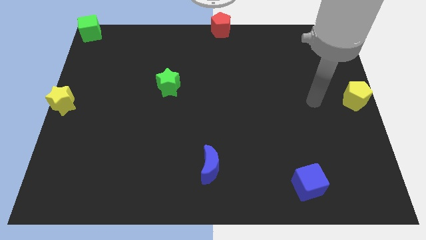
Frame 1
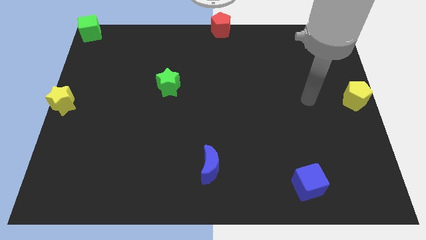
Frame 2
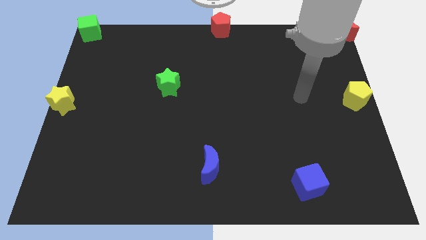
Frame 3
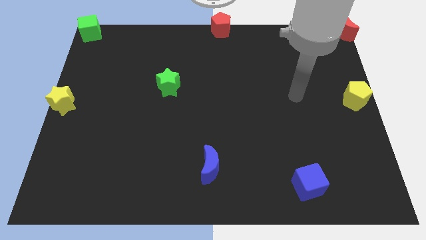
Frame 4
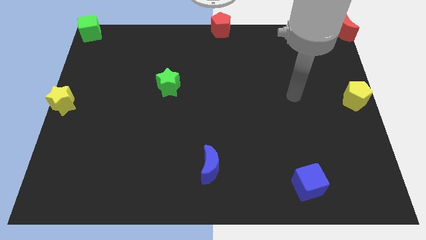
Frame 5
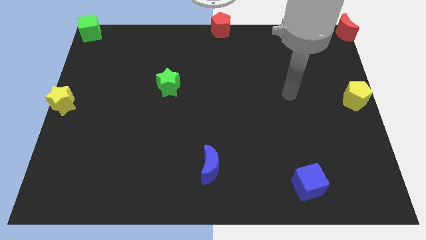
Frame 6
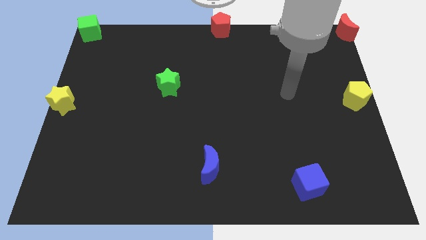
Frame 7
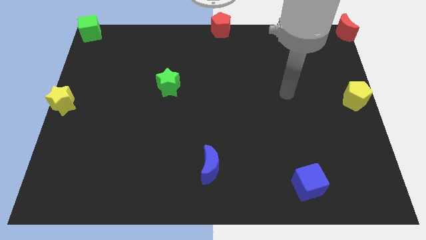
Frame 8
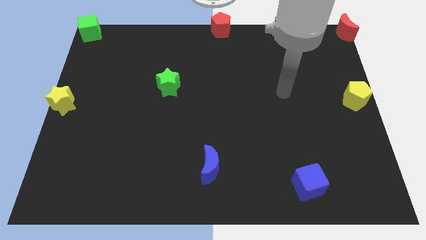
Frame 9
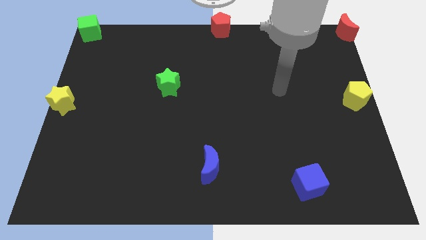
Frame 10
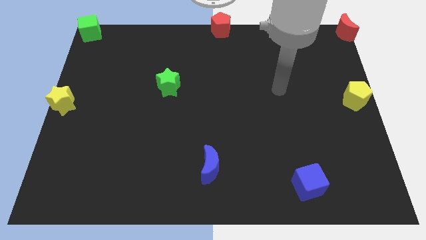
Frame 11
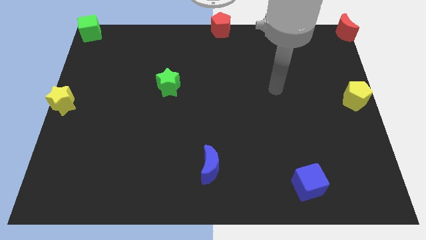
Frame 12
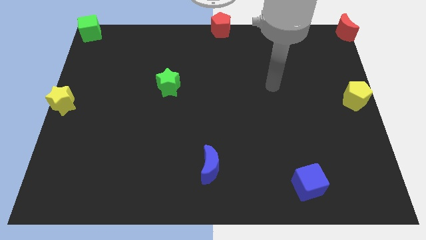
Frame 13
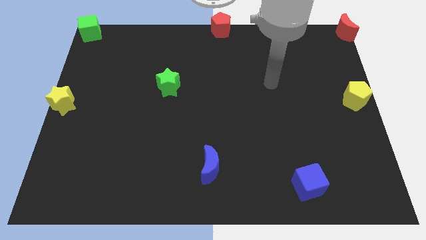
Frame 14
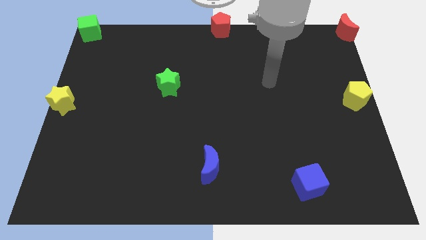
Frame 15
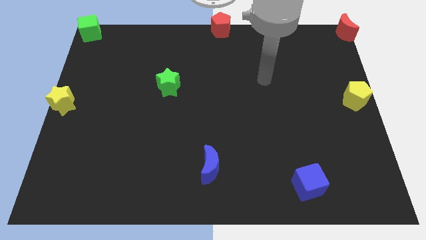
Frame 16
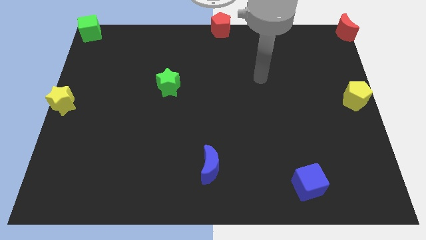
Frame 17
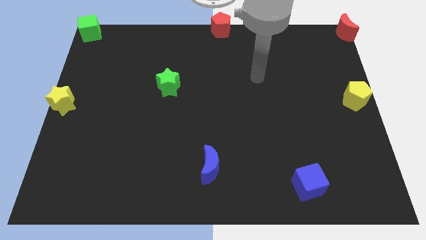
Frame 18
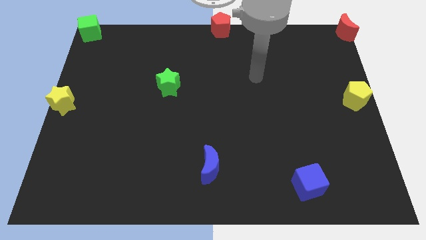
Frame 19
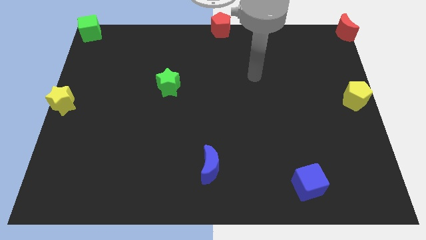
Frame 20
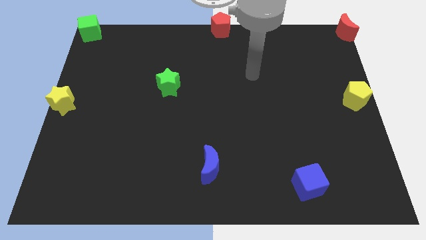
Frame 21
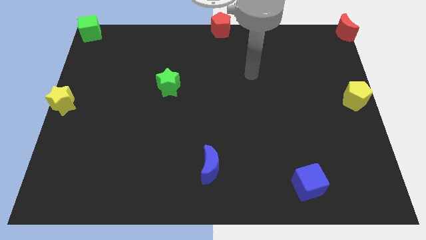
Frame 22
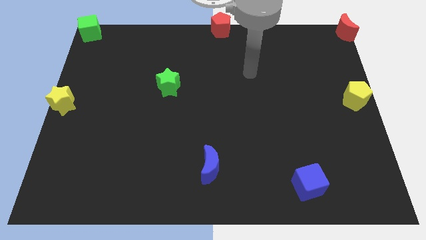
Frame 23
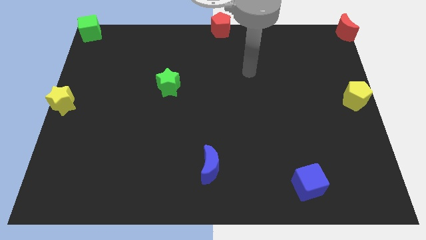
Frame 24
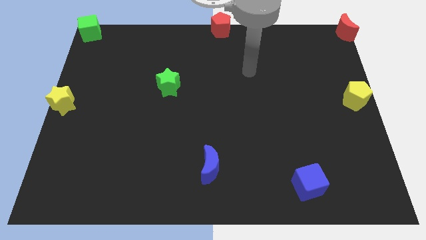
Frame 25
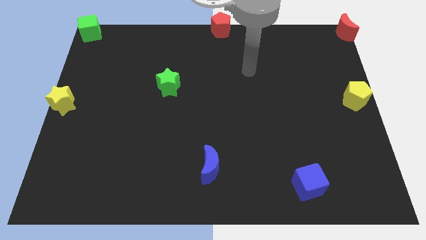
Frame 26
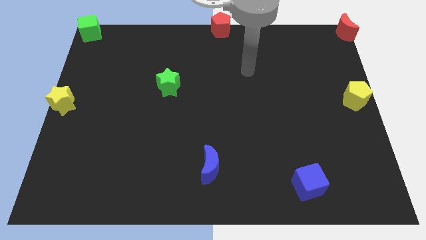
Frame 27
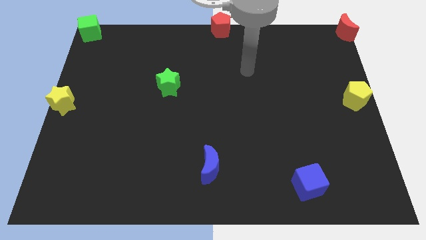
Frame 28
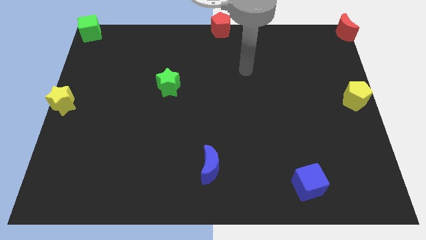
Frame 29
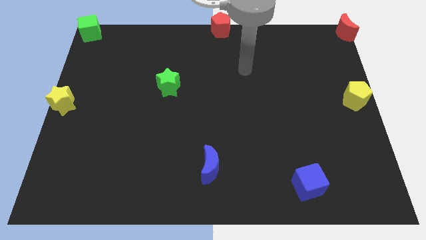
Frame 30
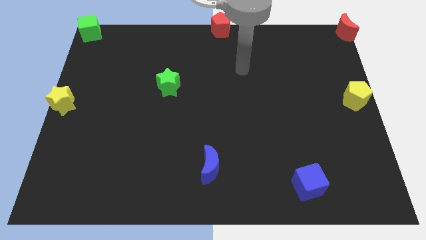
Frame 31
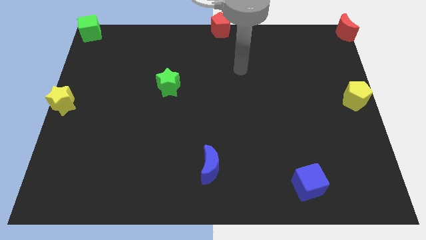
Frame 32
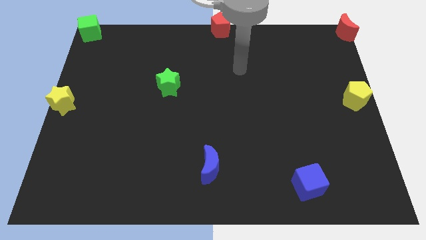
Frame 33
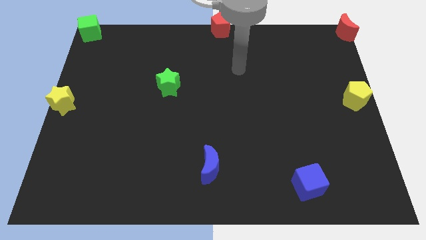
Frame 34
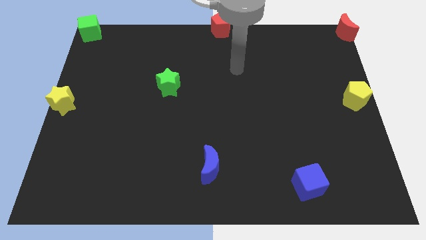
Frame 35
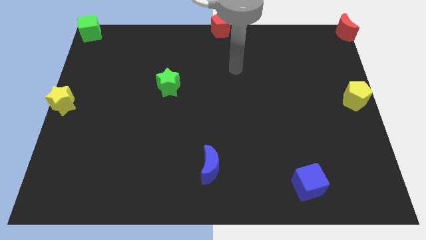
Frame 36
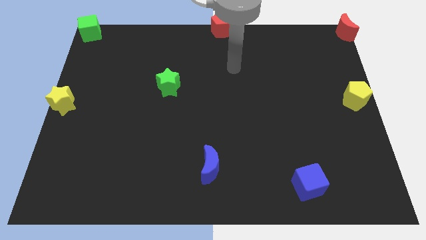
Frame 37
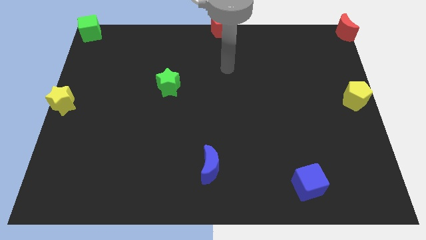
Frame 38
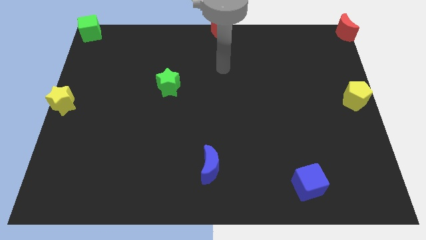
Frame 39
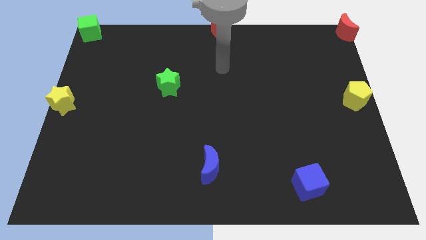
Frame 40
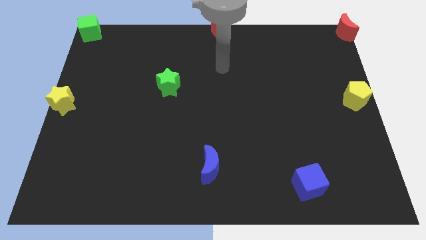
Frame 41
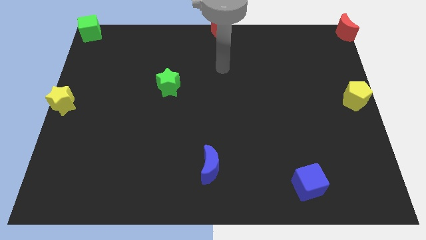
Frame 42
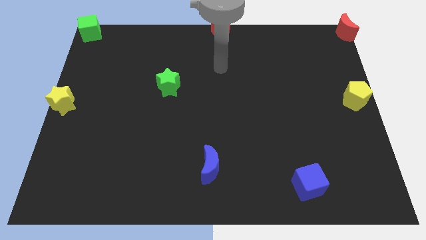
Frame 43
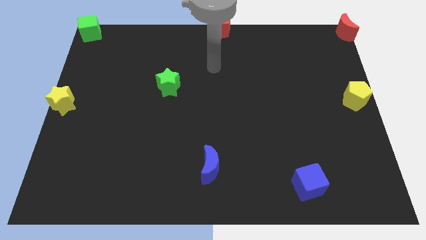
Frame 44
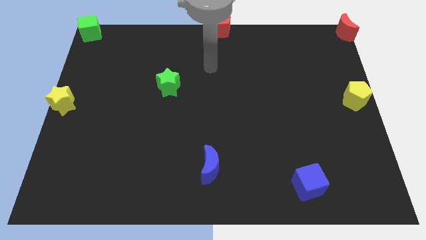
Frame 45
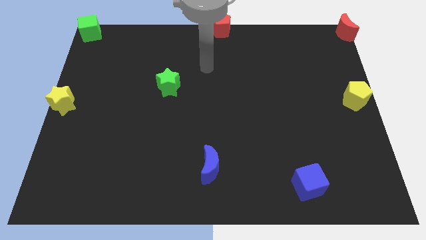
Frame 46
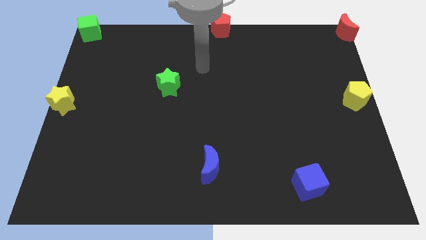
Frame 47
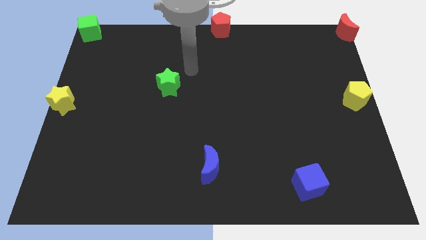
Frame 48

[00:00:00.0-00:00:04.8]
move your arm to the top right of green star

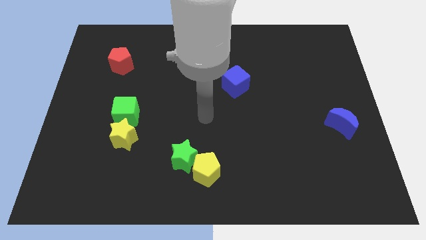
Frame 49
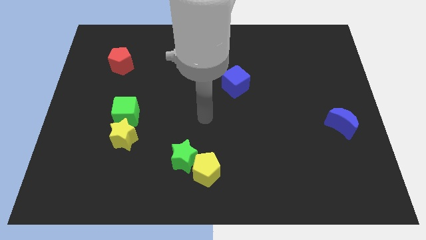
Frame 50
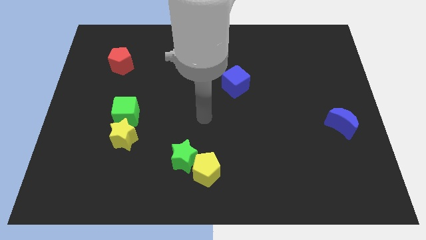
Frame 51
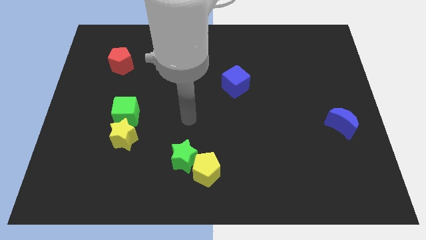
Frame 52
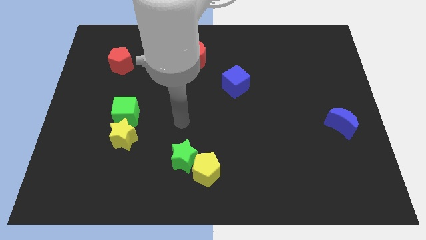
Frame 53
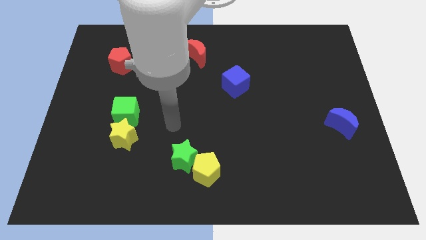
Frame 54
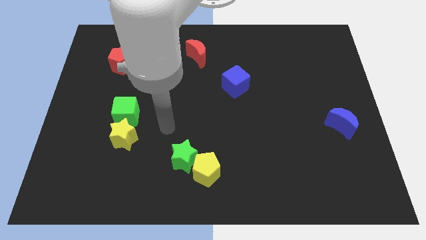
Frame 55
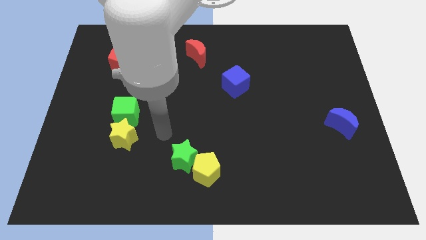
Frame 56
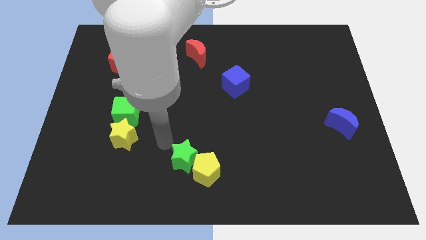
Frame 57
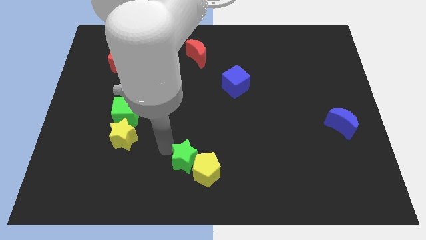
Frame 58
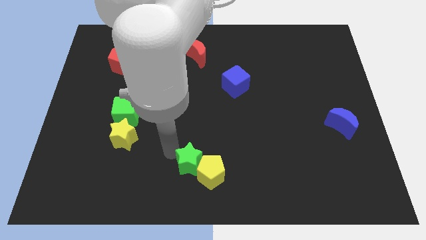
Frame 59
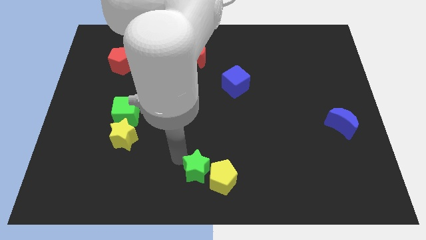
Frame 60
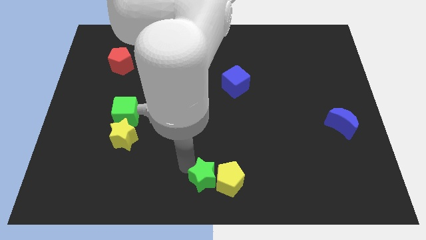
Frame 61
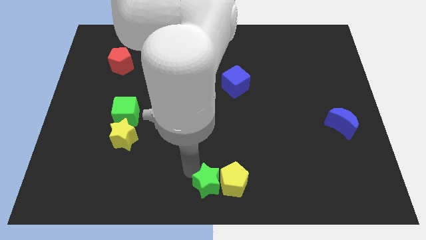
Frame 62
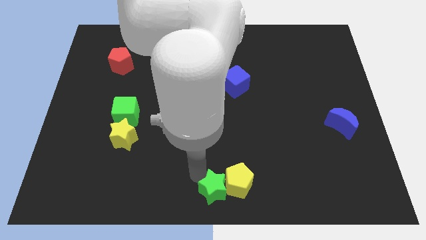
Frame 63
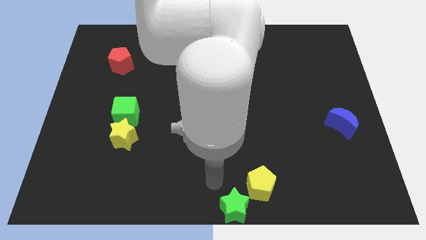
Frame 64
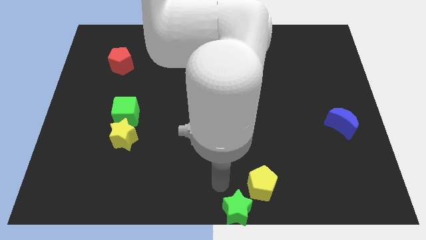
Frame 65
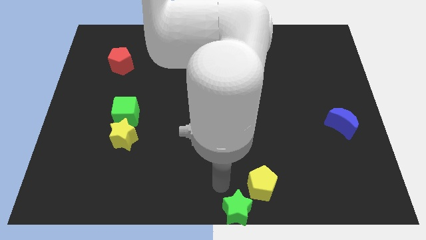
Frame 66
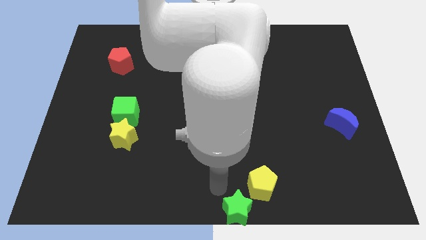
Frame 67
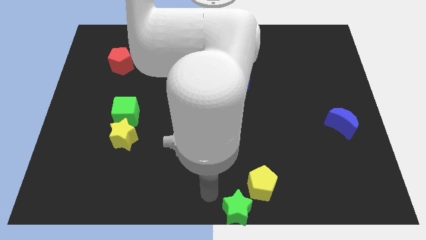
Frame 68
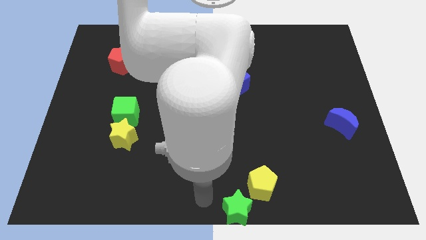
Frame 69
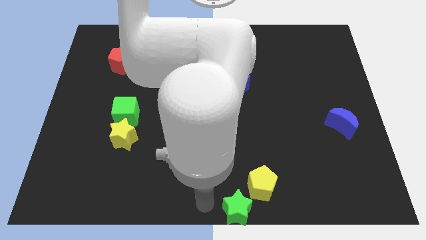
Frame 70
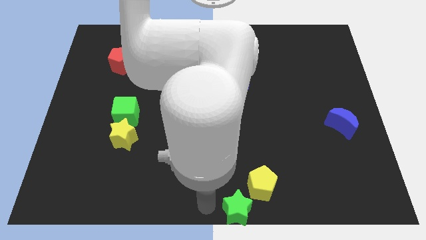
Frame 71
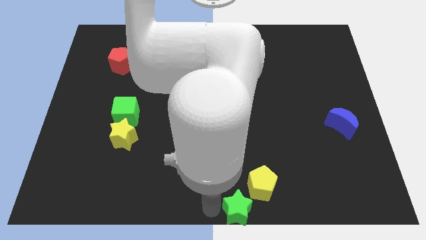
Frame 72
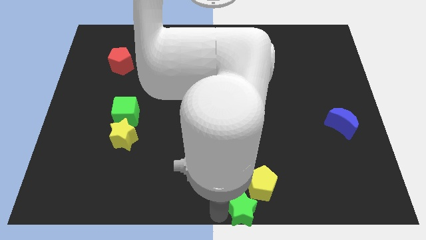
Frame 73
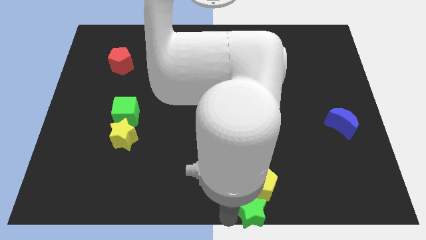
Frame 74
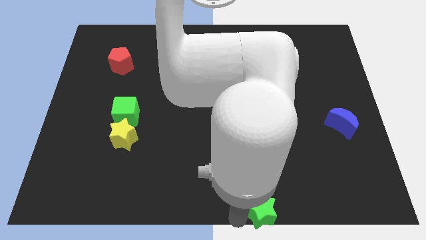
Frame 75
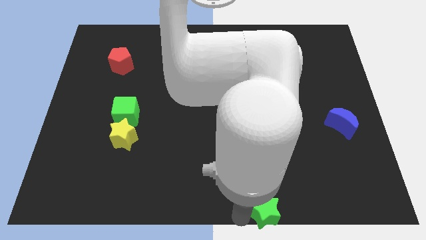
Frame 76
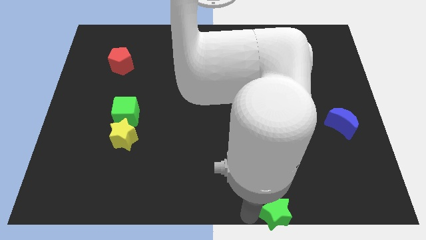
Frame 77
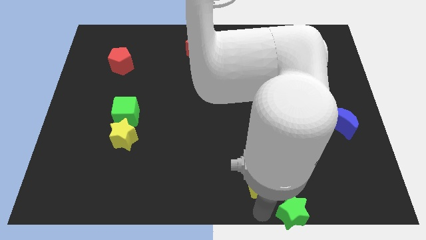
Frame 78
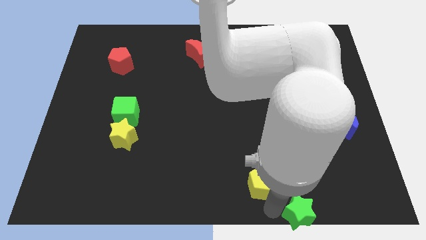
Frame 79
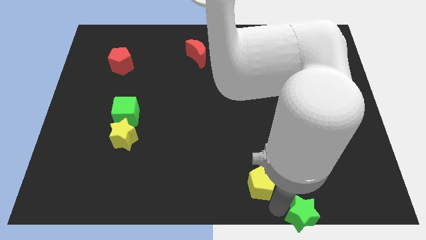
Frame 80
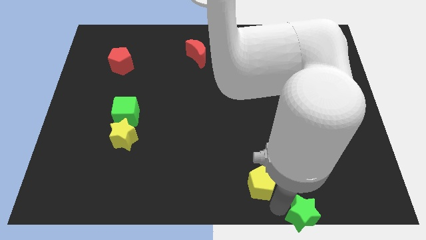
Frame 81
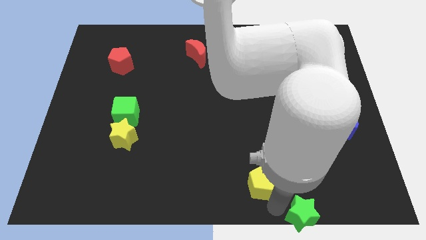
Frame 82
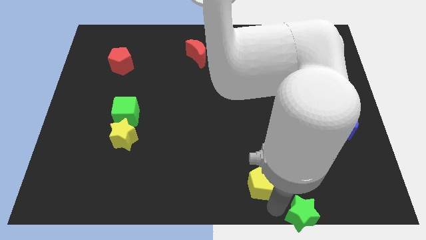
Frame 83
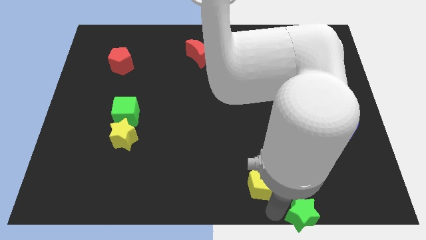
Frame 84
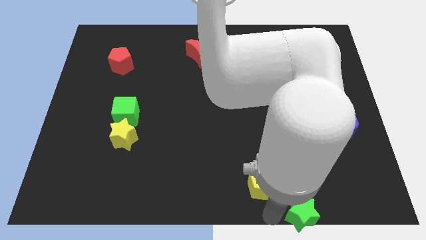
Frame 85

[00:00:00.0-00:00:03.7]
place green star to the bottom right of yellow pentagon

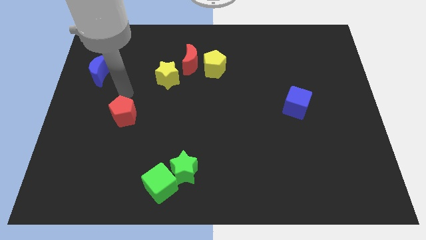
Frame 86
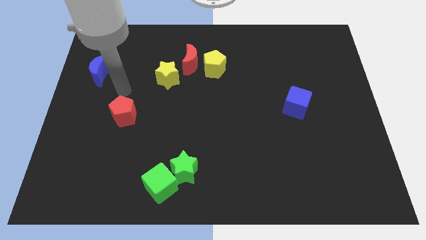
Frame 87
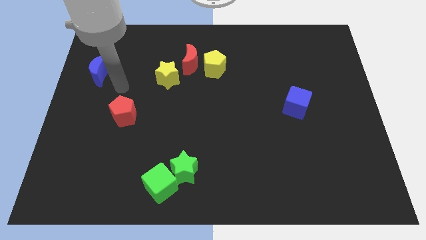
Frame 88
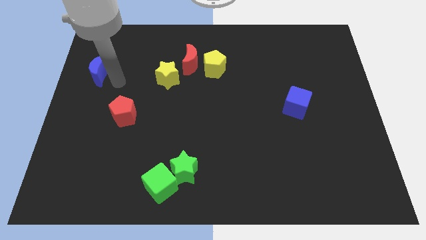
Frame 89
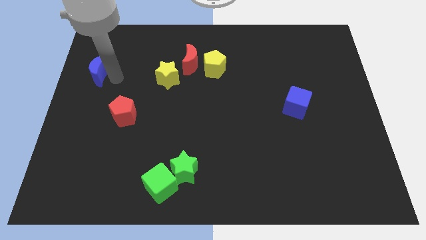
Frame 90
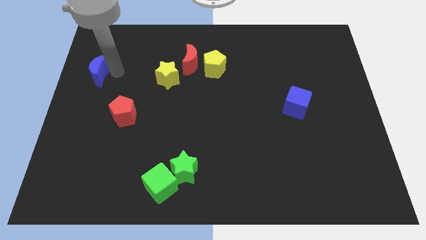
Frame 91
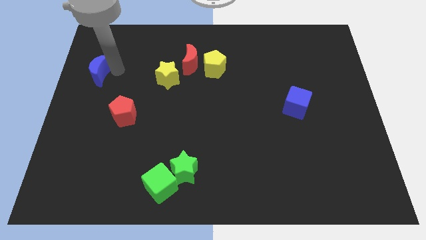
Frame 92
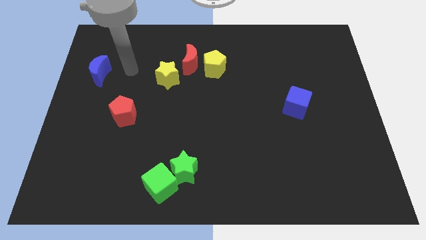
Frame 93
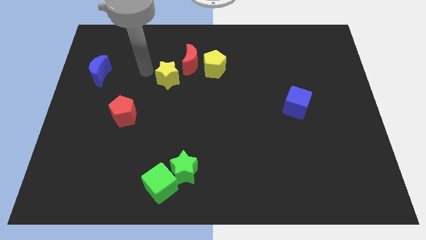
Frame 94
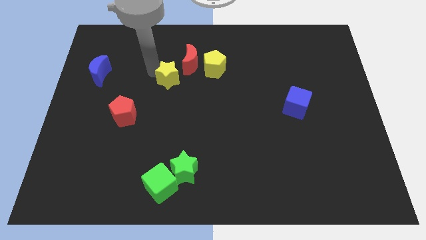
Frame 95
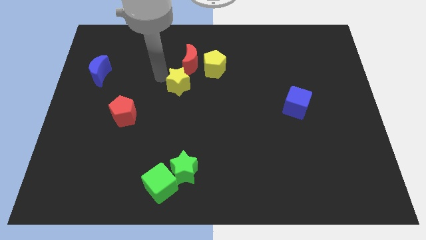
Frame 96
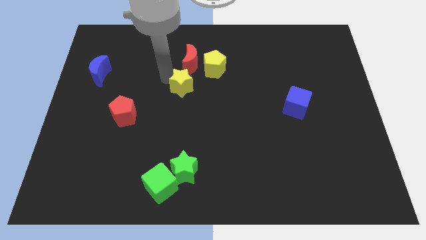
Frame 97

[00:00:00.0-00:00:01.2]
place the yellow star in between the yellow pentagon and red pentagon
